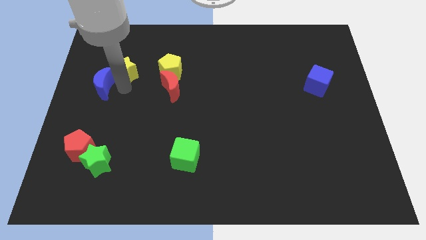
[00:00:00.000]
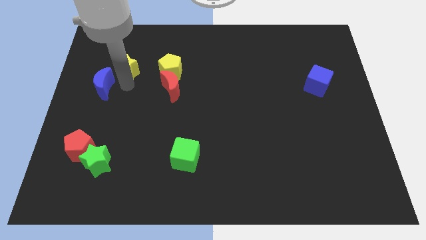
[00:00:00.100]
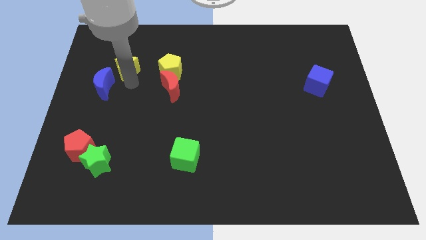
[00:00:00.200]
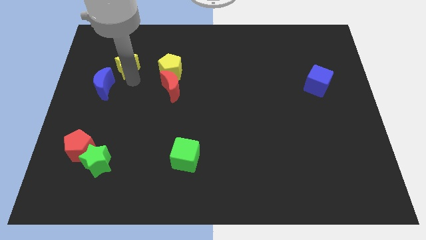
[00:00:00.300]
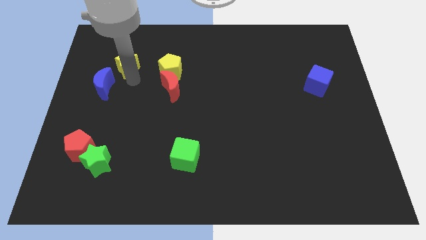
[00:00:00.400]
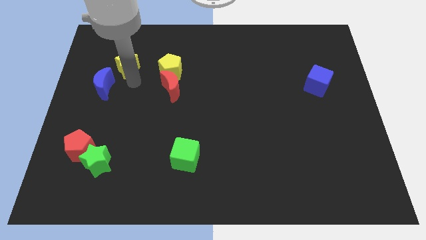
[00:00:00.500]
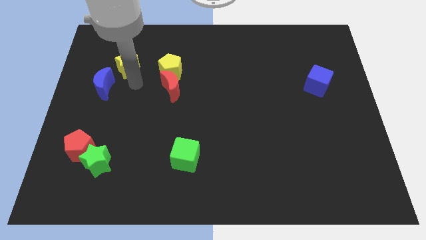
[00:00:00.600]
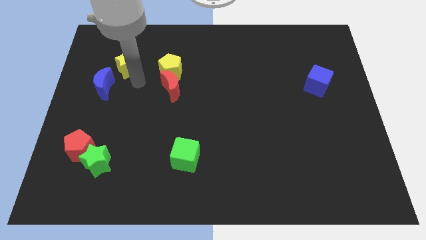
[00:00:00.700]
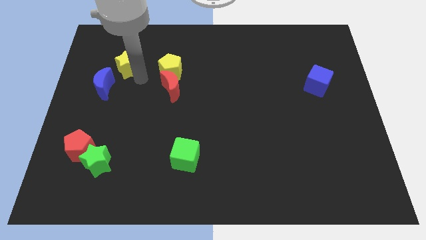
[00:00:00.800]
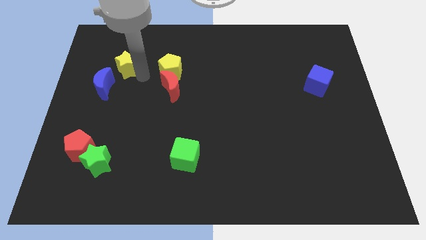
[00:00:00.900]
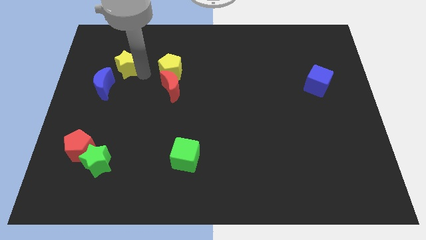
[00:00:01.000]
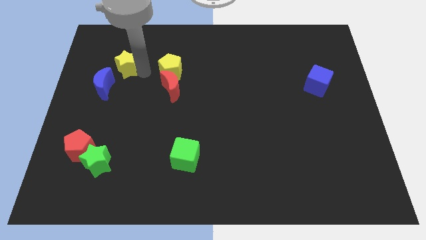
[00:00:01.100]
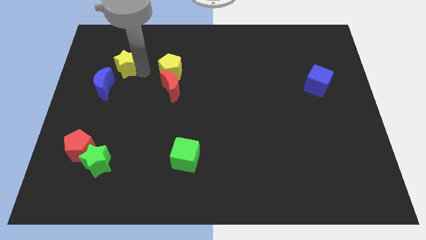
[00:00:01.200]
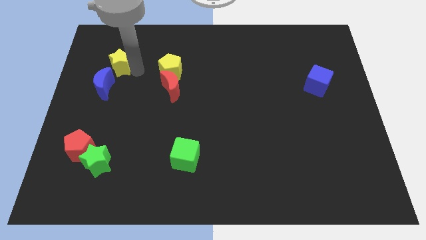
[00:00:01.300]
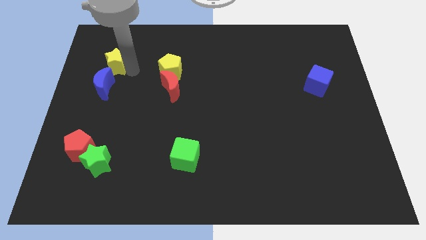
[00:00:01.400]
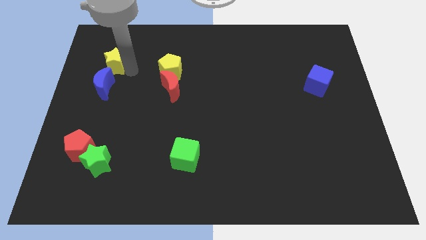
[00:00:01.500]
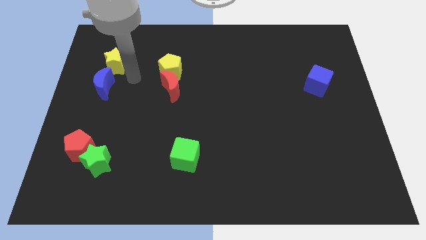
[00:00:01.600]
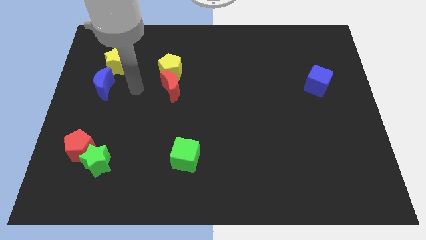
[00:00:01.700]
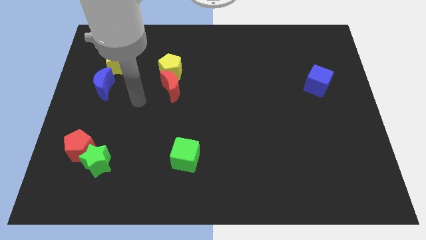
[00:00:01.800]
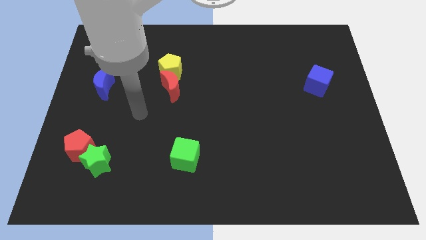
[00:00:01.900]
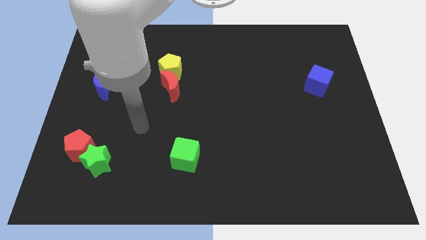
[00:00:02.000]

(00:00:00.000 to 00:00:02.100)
place yellow star to the top of blue moon

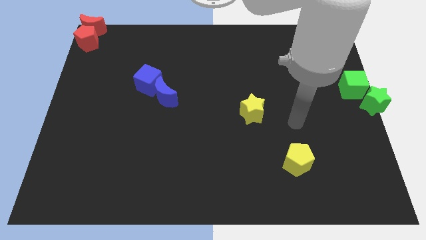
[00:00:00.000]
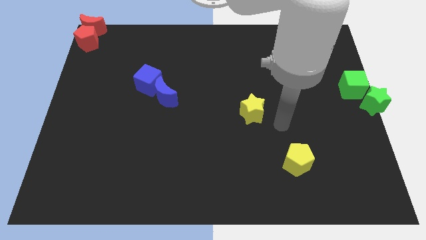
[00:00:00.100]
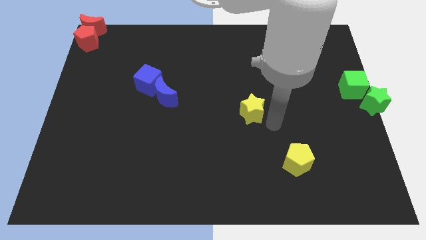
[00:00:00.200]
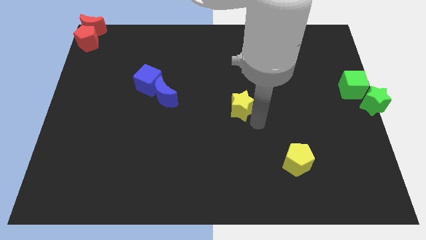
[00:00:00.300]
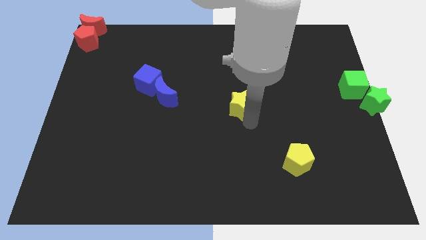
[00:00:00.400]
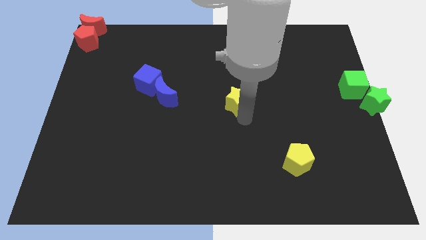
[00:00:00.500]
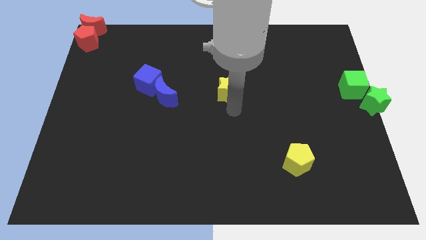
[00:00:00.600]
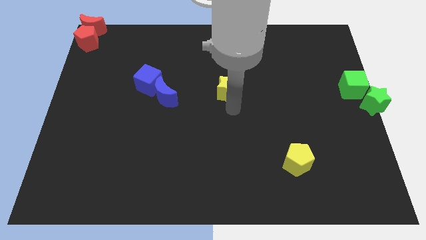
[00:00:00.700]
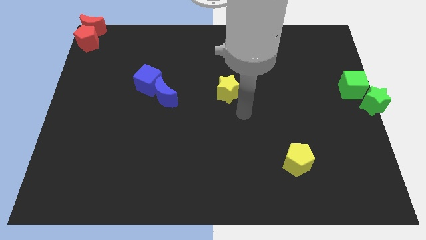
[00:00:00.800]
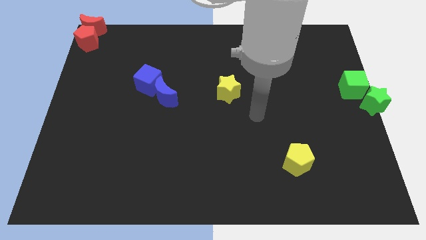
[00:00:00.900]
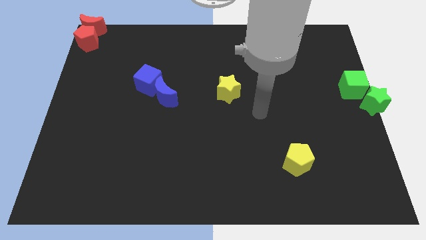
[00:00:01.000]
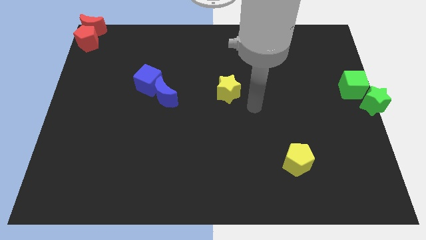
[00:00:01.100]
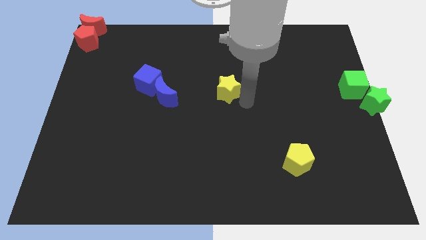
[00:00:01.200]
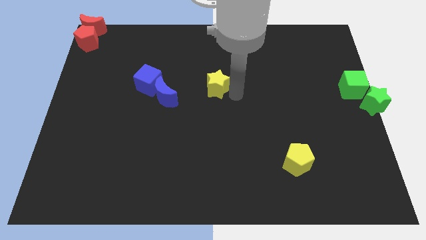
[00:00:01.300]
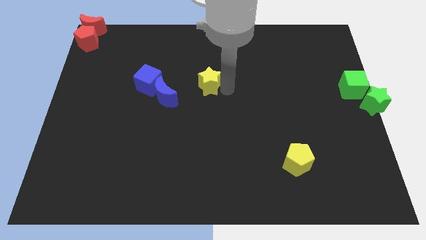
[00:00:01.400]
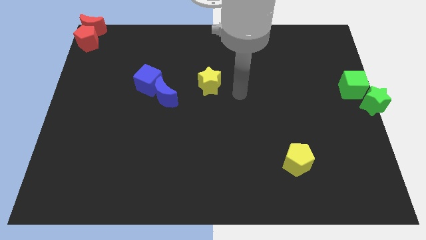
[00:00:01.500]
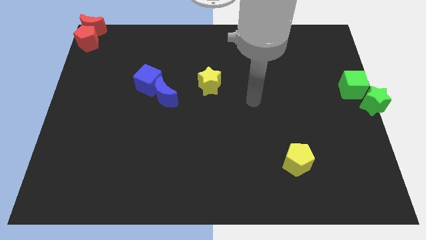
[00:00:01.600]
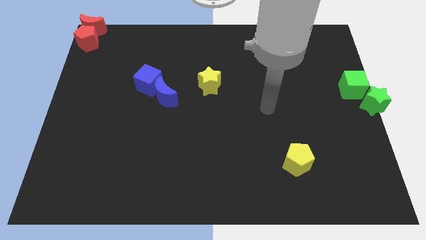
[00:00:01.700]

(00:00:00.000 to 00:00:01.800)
push the yellow star right beside the blue cube

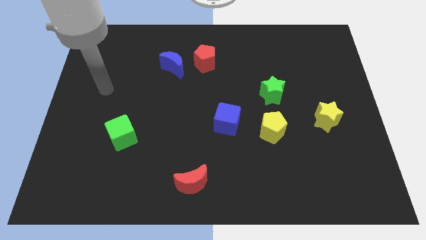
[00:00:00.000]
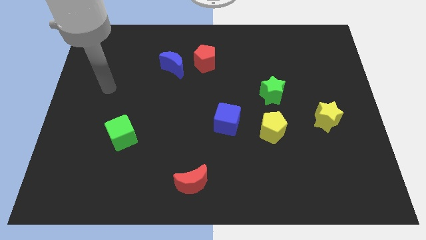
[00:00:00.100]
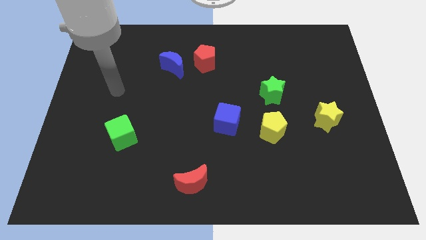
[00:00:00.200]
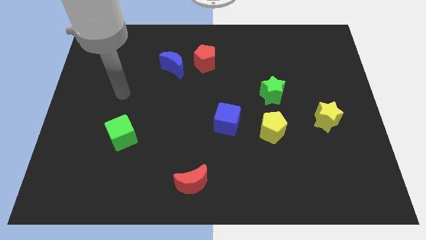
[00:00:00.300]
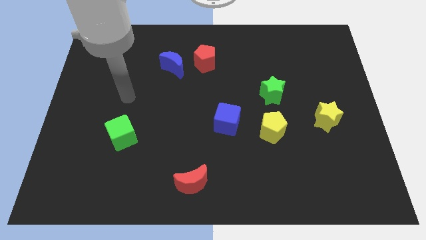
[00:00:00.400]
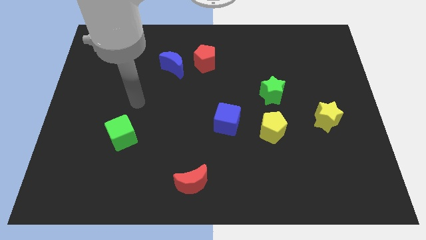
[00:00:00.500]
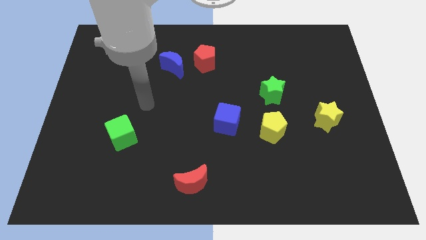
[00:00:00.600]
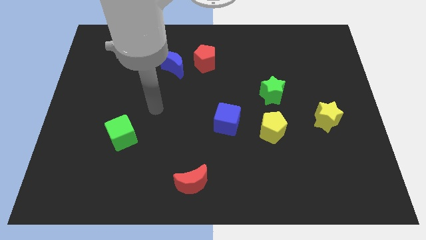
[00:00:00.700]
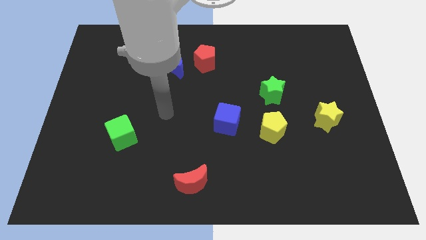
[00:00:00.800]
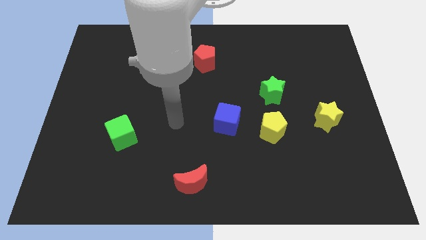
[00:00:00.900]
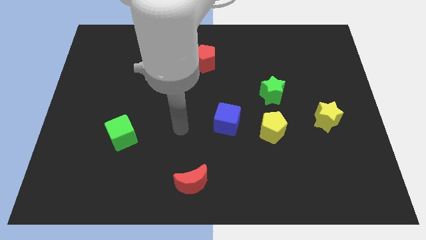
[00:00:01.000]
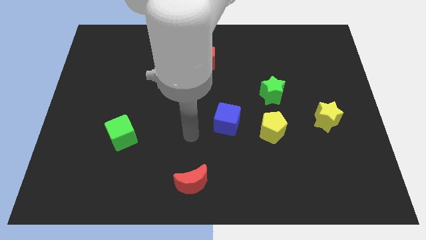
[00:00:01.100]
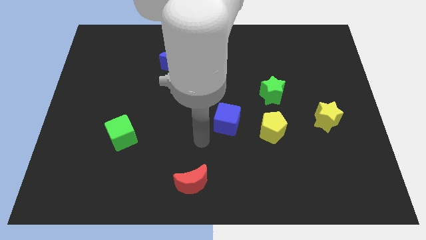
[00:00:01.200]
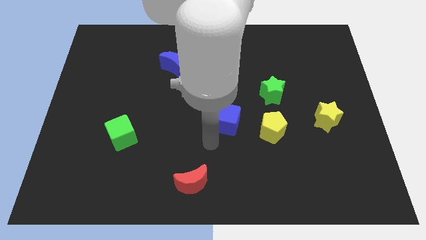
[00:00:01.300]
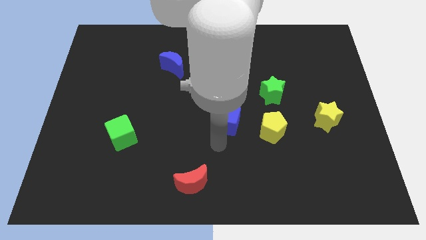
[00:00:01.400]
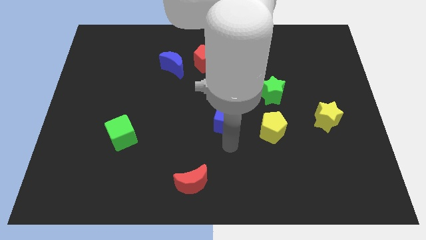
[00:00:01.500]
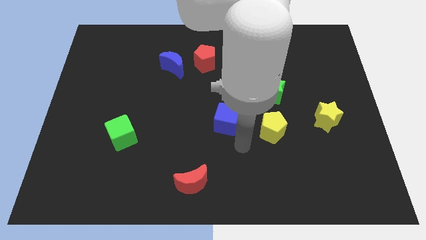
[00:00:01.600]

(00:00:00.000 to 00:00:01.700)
move your arm towards the right side of the board

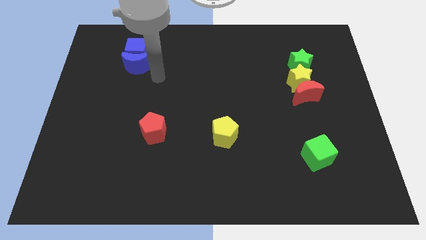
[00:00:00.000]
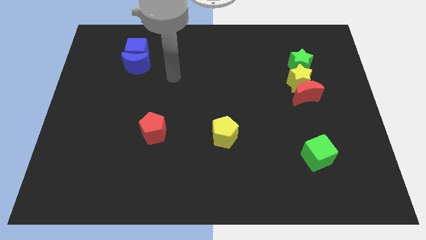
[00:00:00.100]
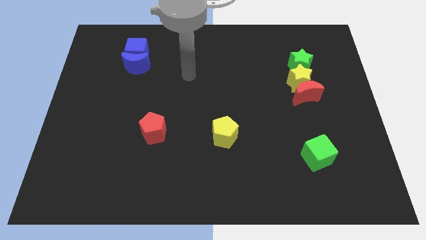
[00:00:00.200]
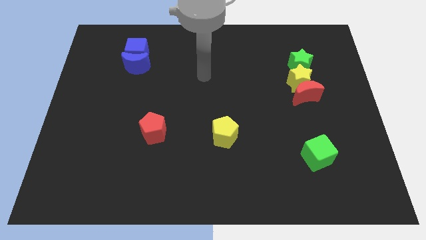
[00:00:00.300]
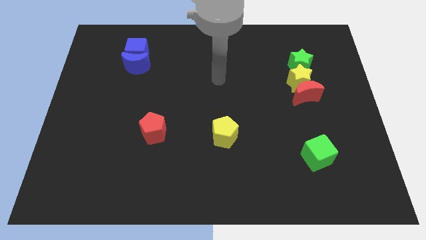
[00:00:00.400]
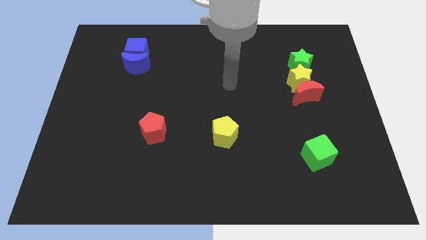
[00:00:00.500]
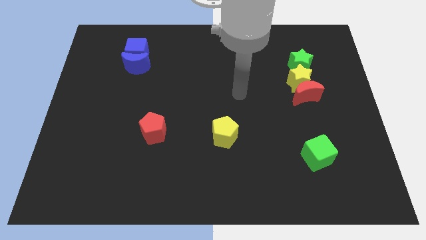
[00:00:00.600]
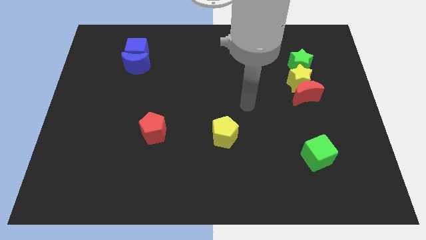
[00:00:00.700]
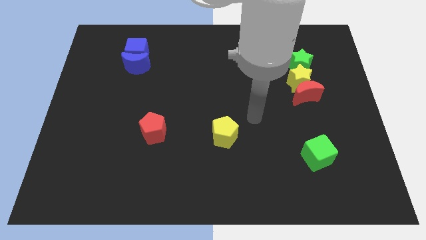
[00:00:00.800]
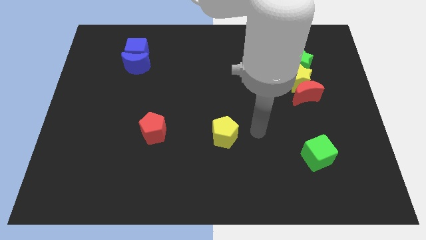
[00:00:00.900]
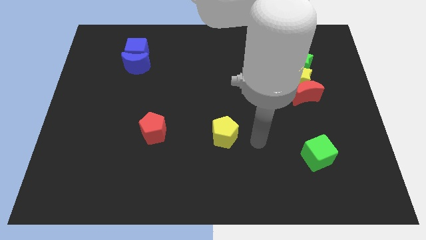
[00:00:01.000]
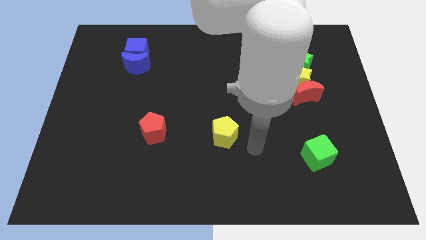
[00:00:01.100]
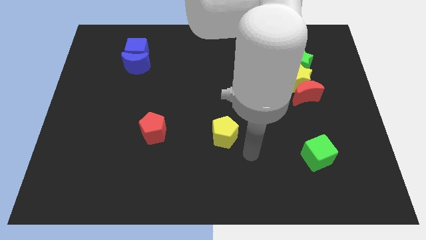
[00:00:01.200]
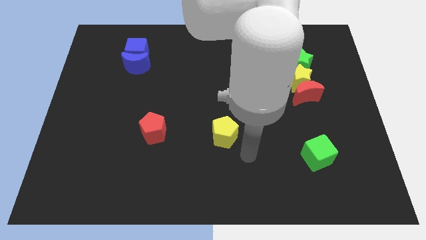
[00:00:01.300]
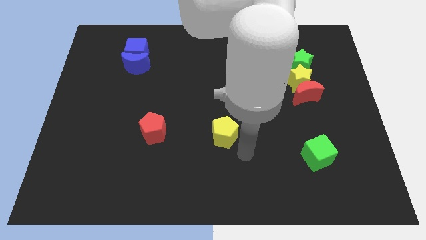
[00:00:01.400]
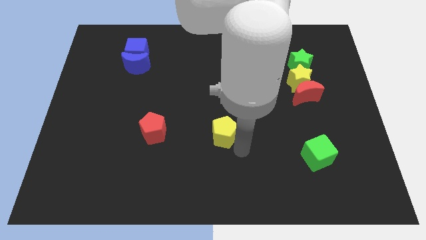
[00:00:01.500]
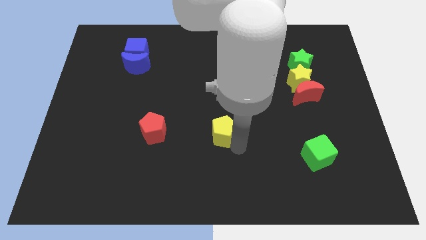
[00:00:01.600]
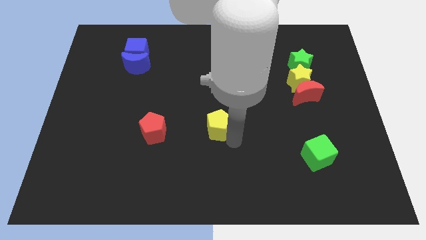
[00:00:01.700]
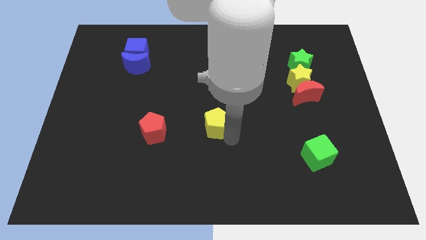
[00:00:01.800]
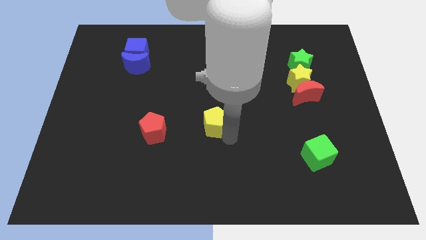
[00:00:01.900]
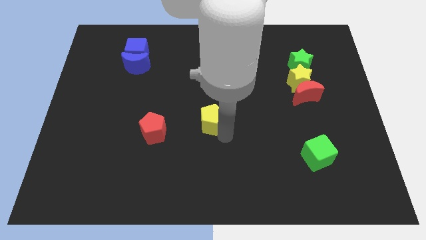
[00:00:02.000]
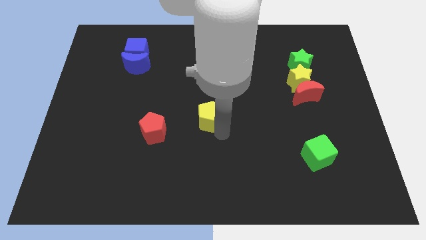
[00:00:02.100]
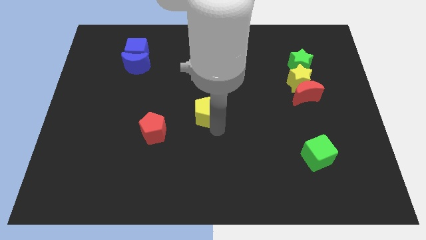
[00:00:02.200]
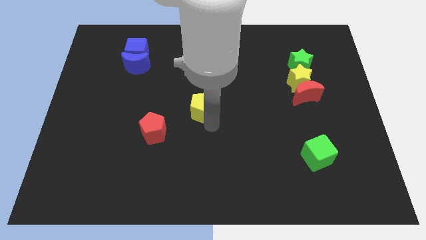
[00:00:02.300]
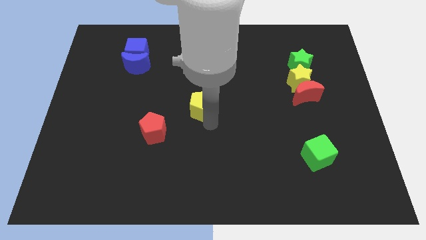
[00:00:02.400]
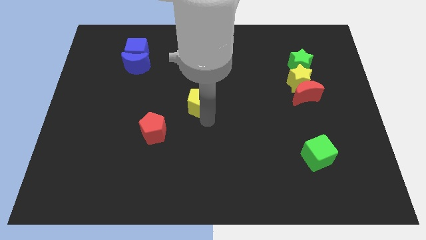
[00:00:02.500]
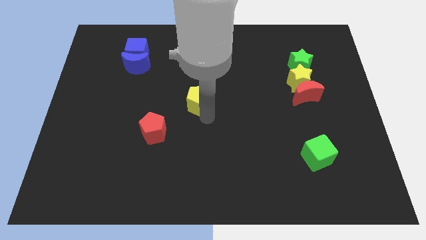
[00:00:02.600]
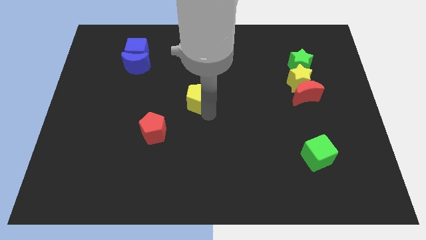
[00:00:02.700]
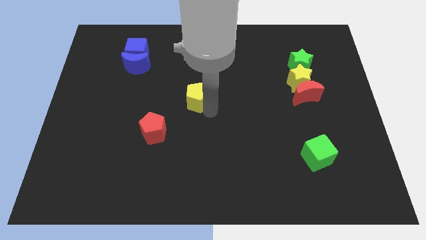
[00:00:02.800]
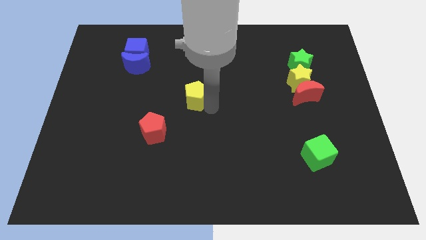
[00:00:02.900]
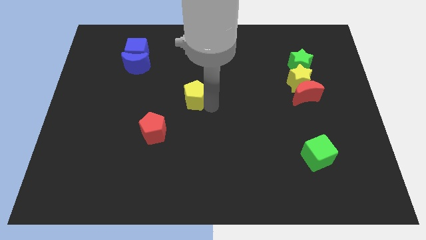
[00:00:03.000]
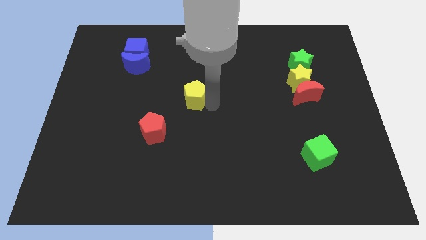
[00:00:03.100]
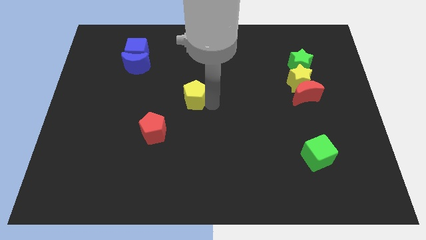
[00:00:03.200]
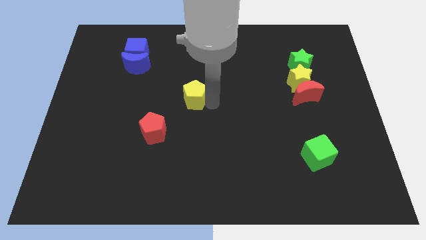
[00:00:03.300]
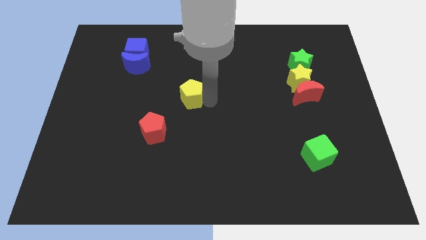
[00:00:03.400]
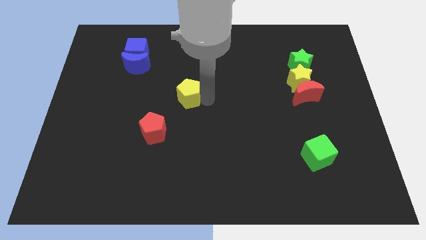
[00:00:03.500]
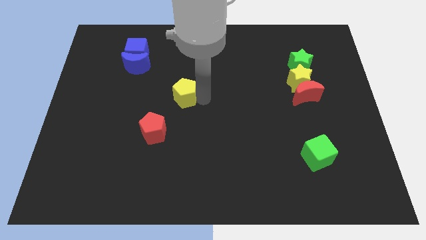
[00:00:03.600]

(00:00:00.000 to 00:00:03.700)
move the yellow pentagon to the center of the board
